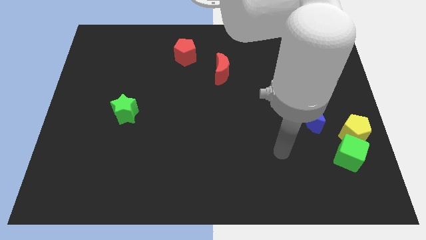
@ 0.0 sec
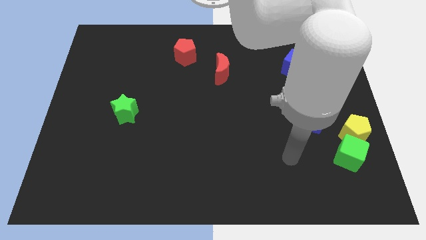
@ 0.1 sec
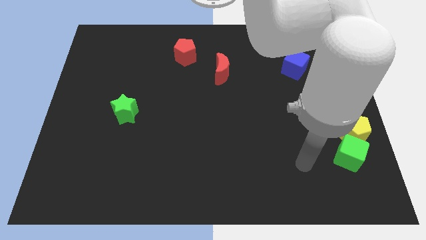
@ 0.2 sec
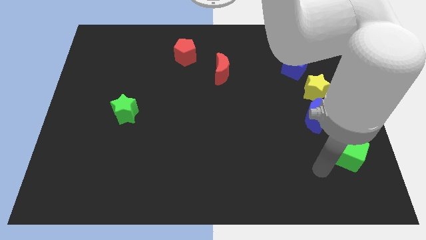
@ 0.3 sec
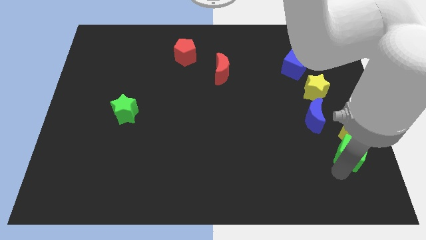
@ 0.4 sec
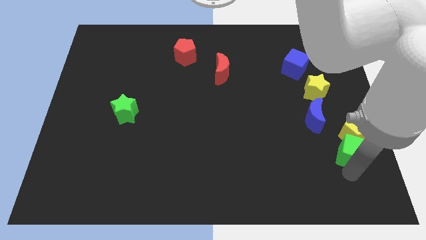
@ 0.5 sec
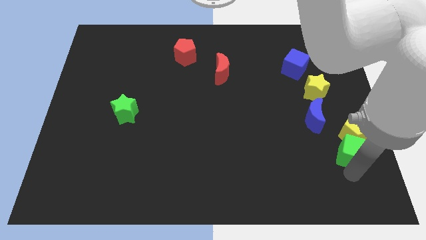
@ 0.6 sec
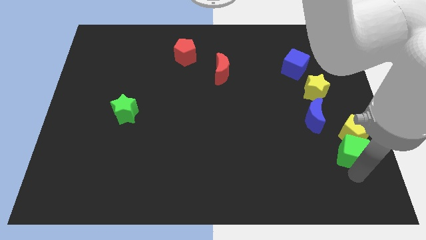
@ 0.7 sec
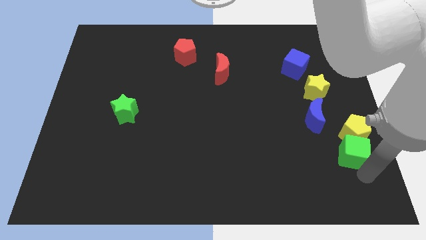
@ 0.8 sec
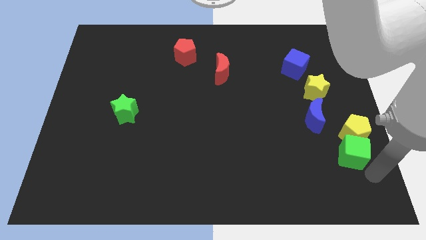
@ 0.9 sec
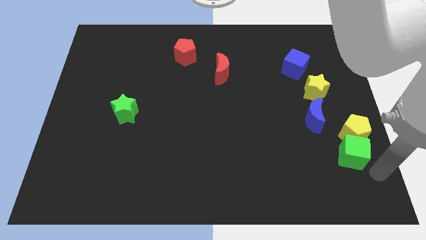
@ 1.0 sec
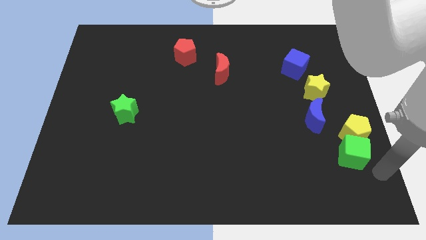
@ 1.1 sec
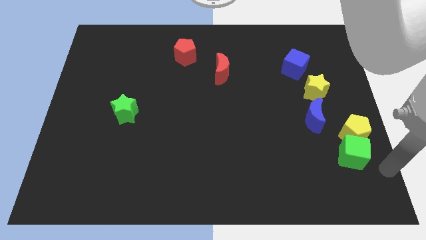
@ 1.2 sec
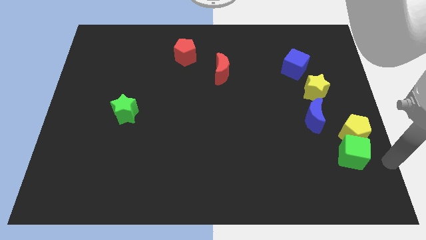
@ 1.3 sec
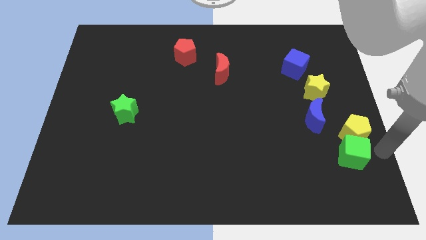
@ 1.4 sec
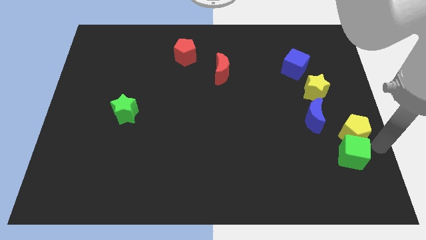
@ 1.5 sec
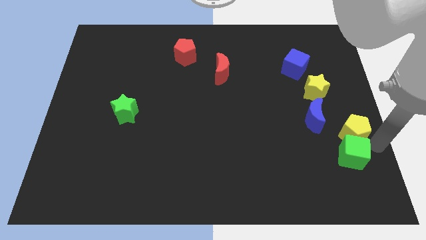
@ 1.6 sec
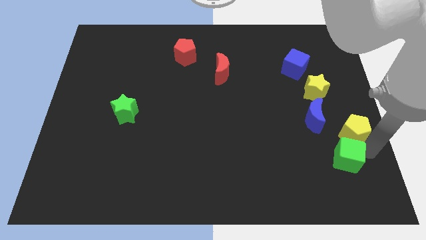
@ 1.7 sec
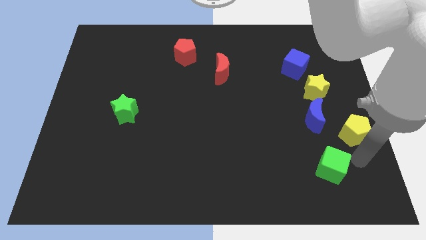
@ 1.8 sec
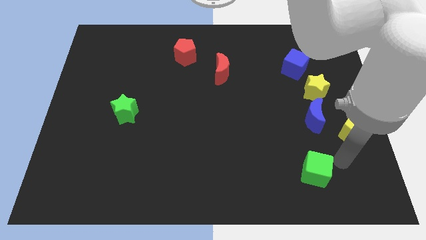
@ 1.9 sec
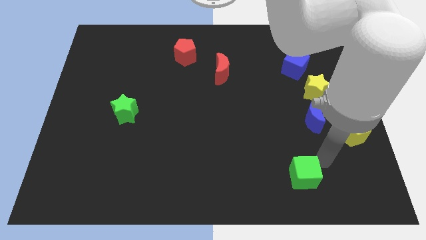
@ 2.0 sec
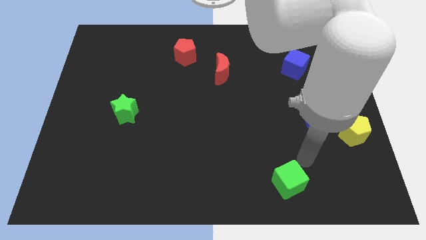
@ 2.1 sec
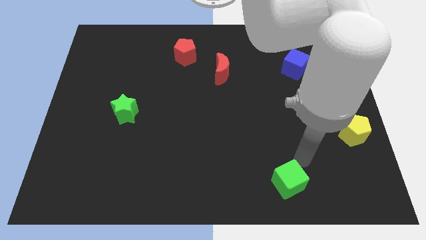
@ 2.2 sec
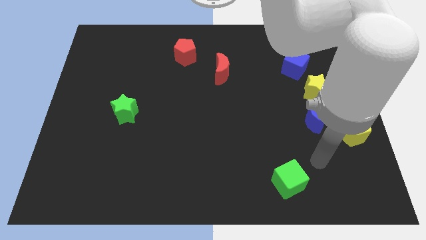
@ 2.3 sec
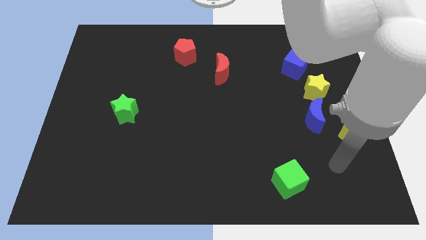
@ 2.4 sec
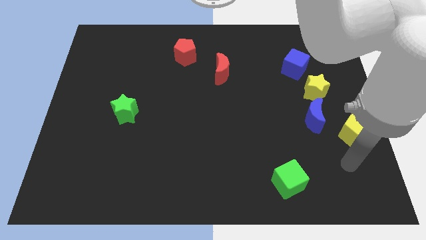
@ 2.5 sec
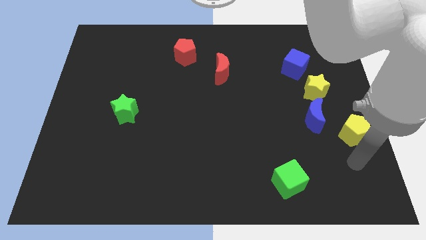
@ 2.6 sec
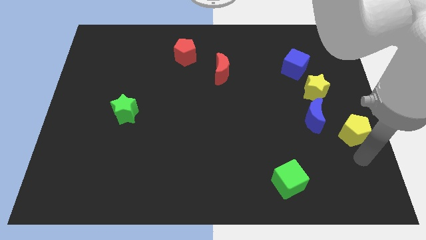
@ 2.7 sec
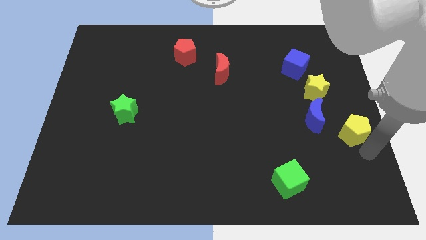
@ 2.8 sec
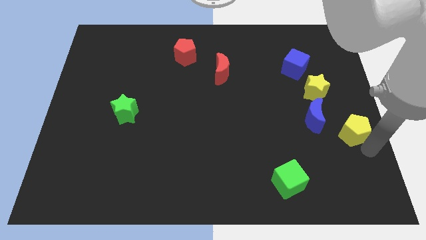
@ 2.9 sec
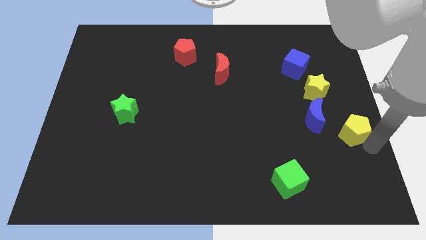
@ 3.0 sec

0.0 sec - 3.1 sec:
move green cube to the bottom of the board

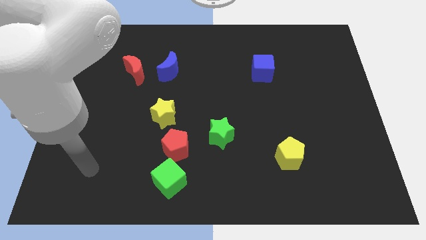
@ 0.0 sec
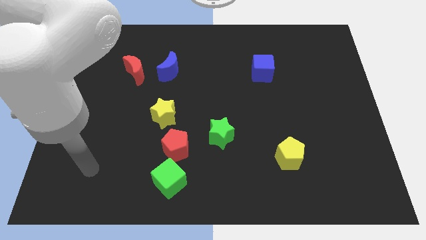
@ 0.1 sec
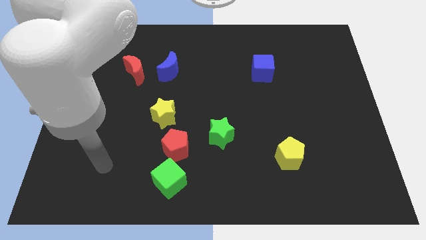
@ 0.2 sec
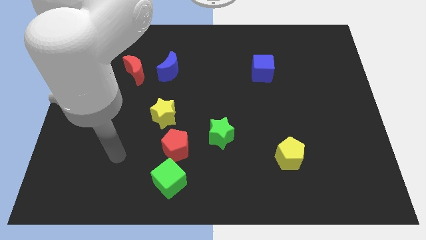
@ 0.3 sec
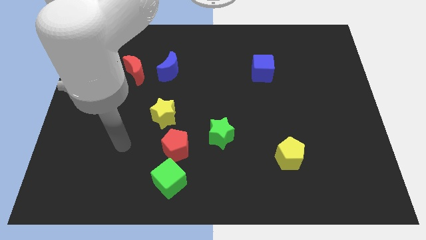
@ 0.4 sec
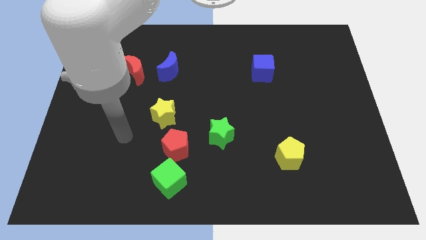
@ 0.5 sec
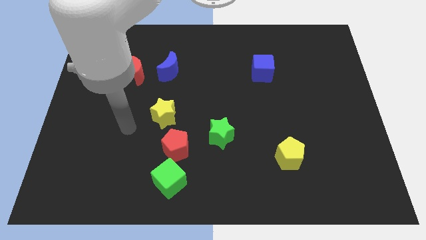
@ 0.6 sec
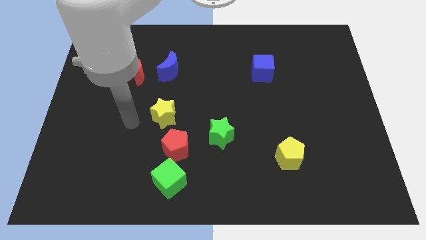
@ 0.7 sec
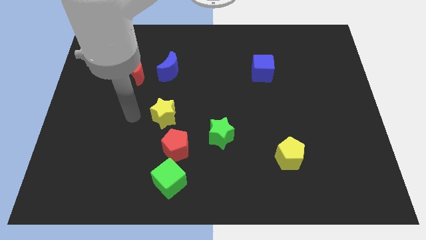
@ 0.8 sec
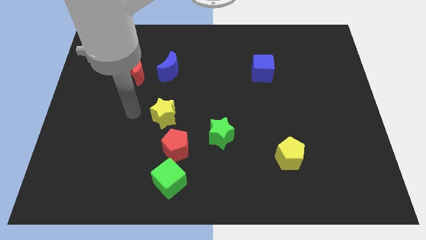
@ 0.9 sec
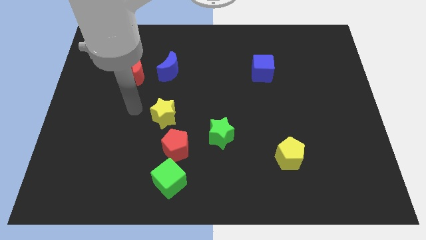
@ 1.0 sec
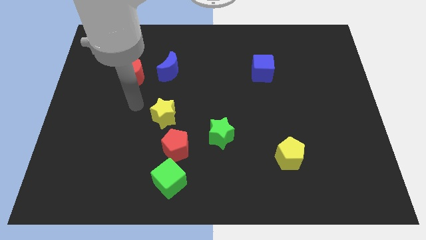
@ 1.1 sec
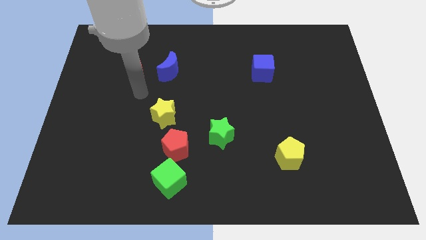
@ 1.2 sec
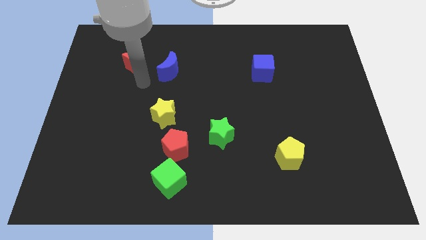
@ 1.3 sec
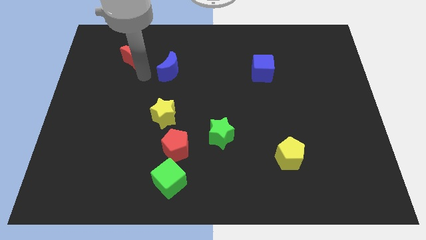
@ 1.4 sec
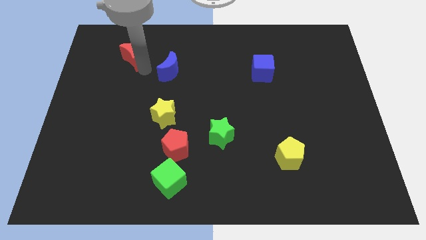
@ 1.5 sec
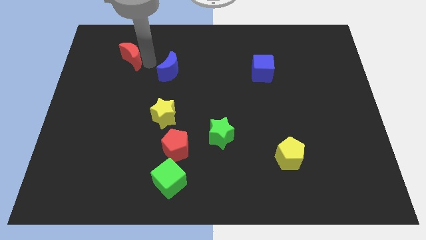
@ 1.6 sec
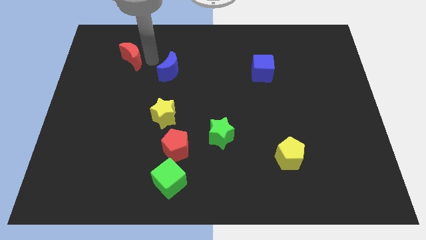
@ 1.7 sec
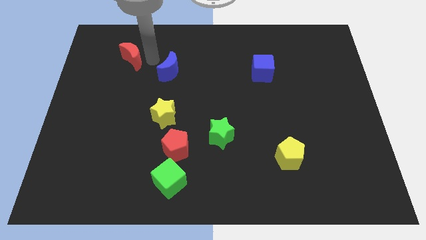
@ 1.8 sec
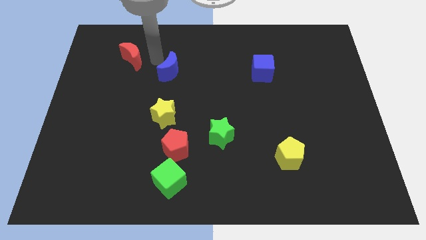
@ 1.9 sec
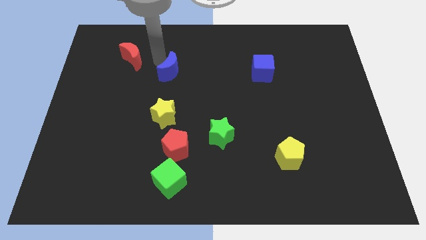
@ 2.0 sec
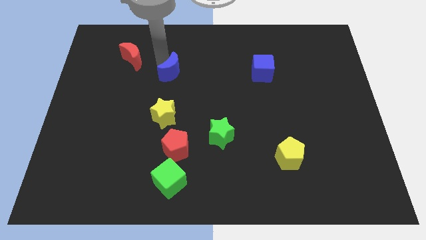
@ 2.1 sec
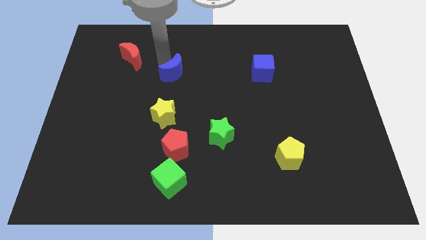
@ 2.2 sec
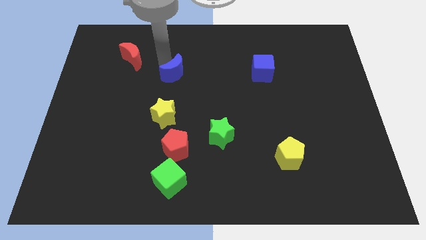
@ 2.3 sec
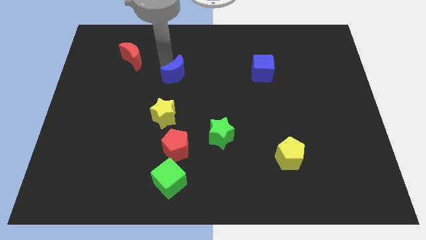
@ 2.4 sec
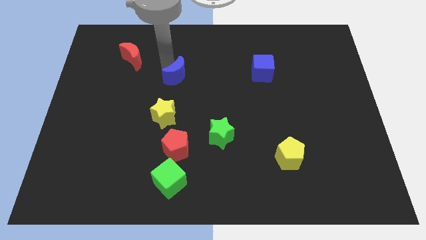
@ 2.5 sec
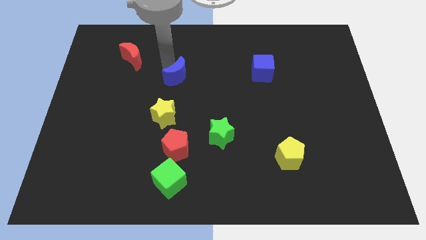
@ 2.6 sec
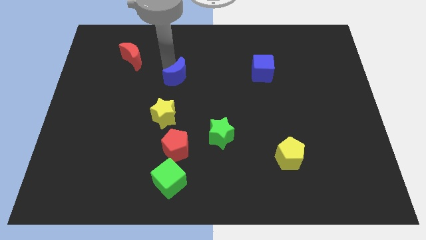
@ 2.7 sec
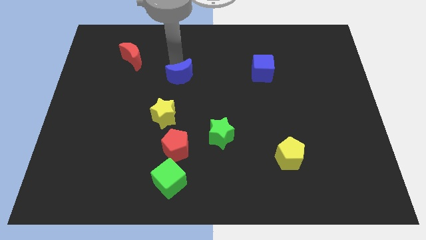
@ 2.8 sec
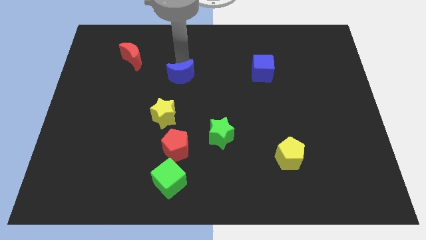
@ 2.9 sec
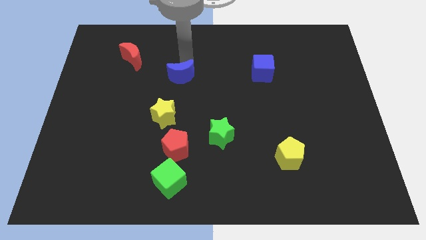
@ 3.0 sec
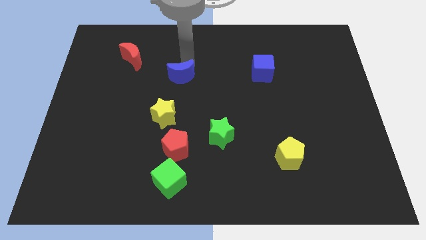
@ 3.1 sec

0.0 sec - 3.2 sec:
tap on the top of blue moon

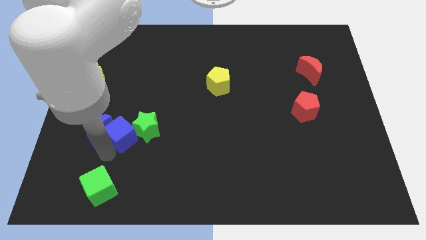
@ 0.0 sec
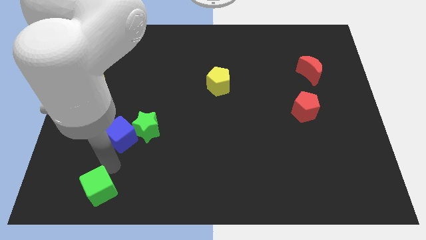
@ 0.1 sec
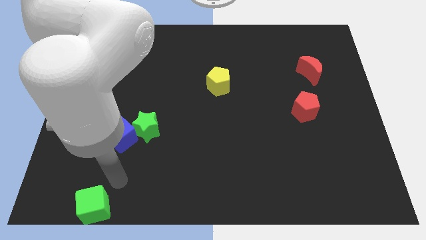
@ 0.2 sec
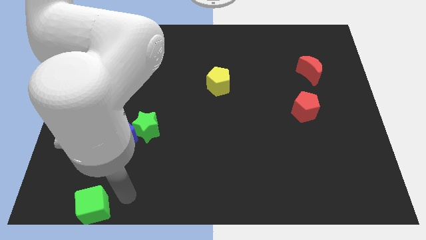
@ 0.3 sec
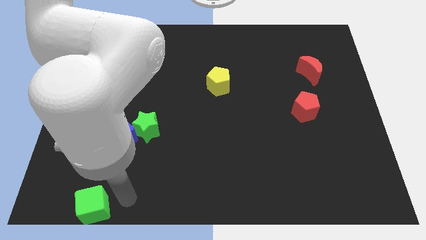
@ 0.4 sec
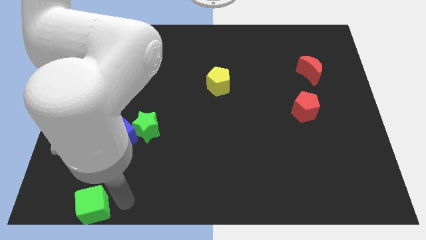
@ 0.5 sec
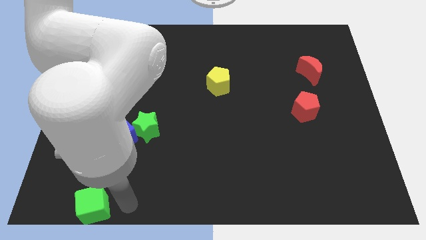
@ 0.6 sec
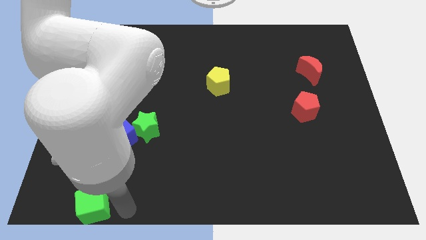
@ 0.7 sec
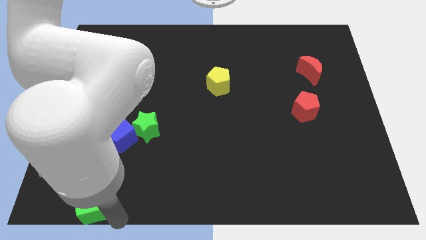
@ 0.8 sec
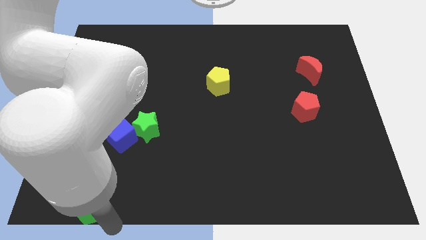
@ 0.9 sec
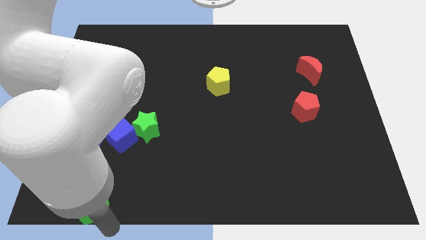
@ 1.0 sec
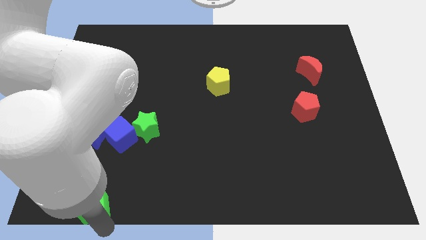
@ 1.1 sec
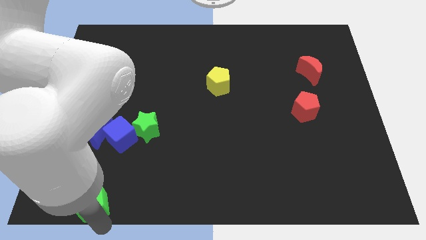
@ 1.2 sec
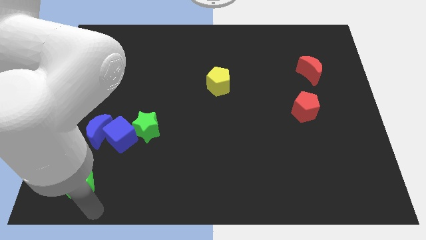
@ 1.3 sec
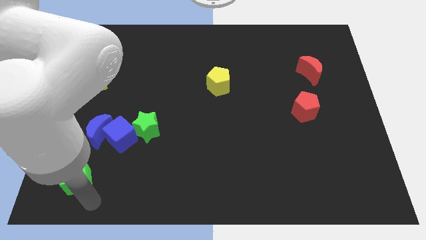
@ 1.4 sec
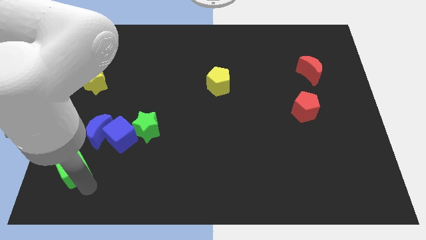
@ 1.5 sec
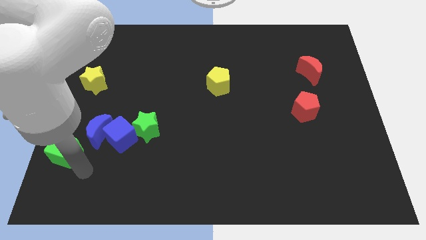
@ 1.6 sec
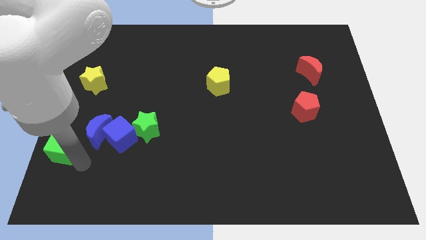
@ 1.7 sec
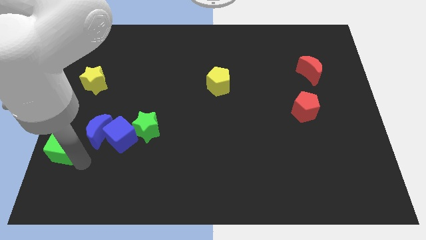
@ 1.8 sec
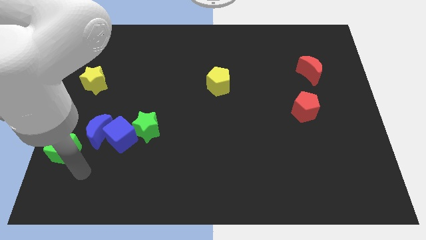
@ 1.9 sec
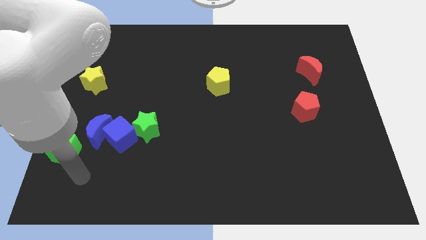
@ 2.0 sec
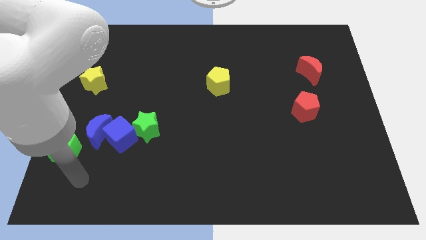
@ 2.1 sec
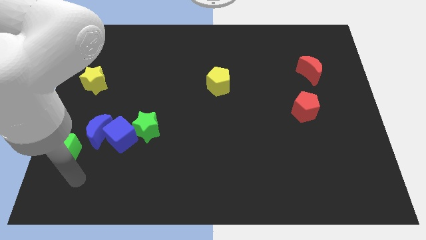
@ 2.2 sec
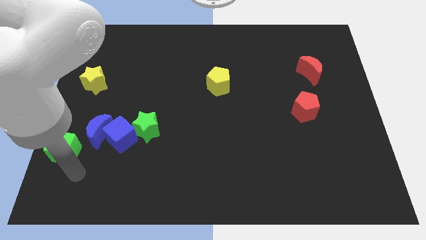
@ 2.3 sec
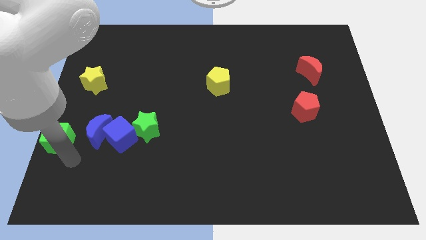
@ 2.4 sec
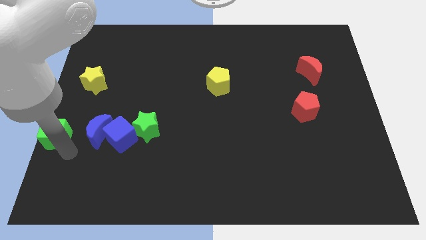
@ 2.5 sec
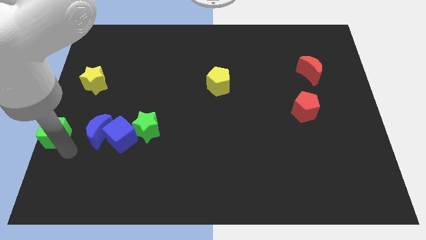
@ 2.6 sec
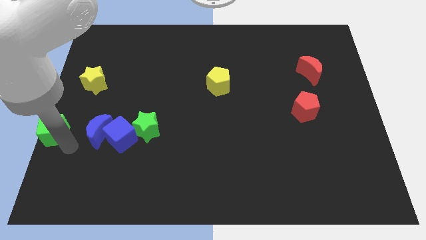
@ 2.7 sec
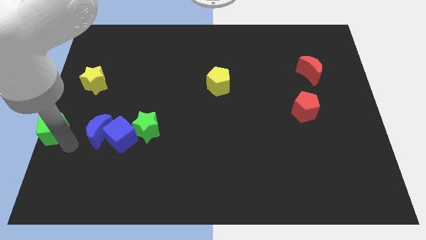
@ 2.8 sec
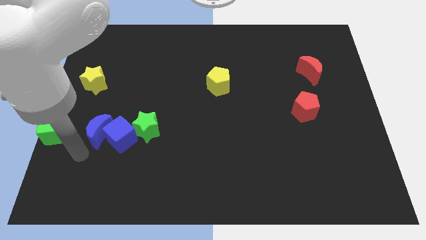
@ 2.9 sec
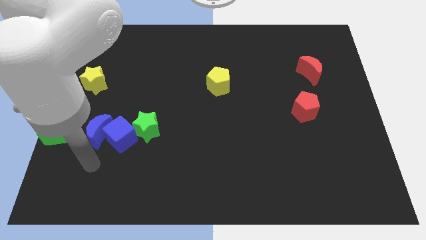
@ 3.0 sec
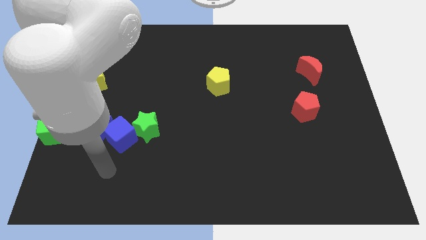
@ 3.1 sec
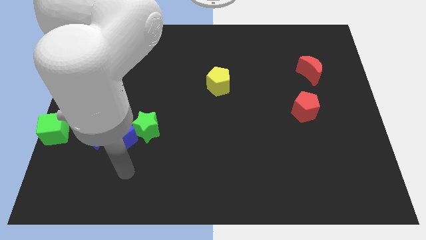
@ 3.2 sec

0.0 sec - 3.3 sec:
push the green cube to the bottom center left
